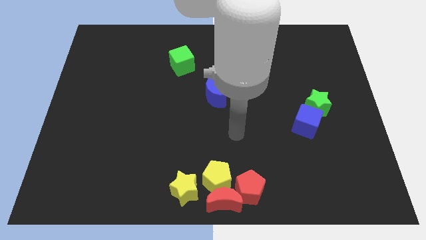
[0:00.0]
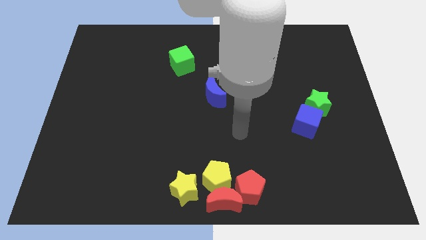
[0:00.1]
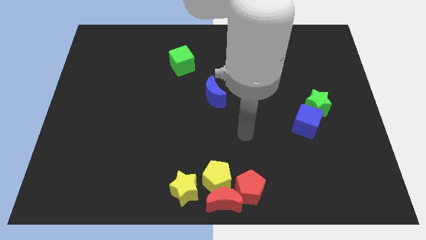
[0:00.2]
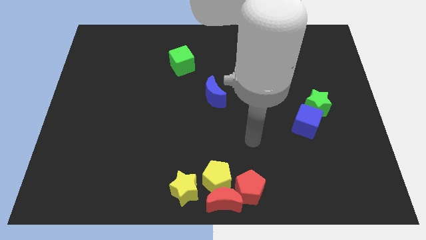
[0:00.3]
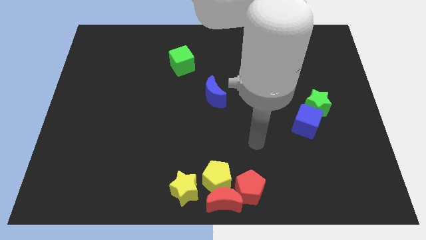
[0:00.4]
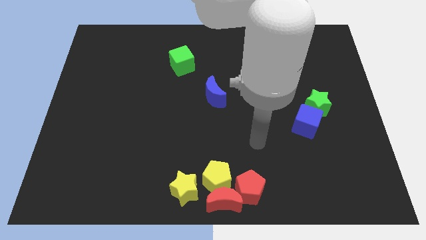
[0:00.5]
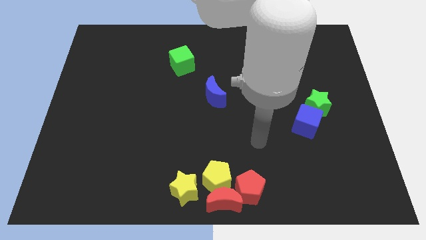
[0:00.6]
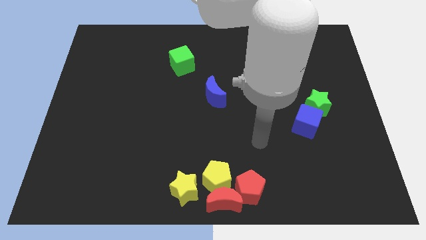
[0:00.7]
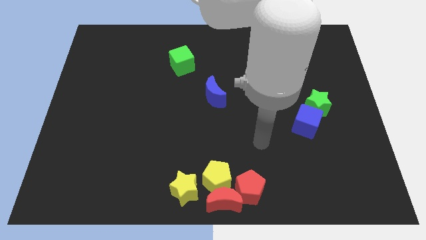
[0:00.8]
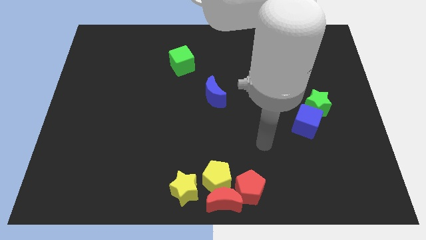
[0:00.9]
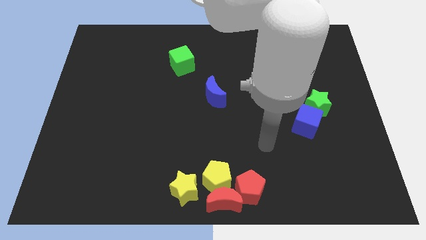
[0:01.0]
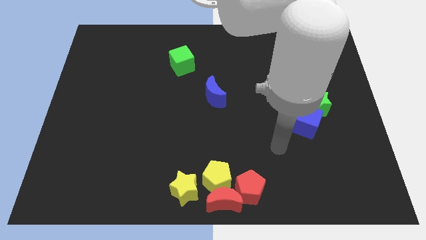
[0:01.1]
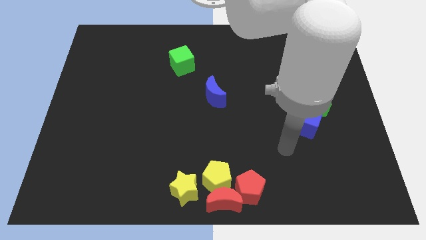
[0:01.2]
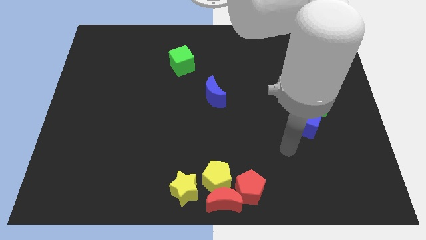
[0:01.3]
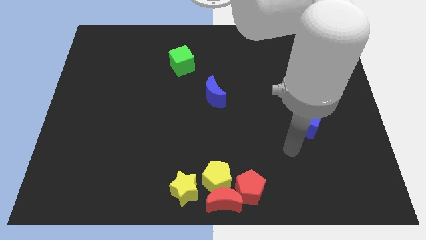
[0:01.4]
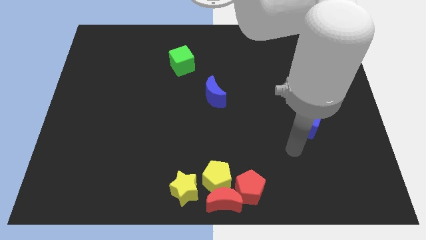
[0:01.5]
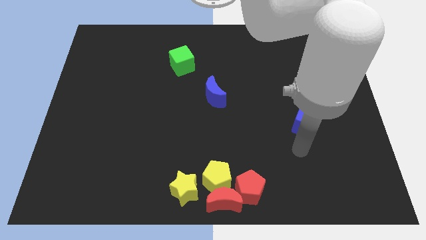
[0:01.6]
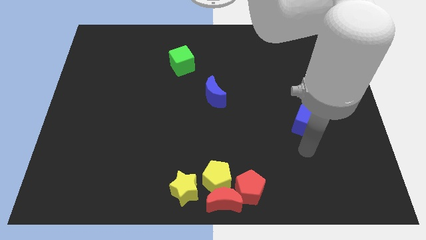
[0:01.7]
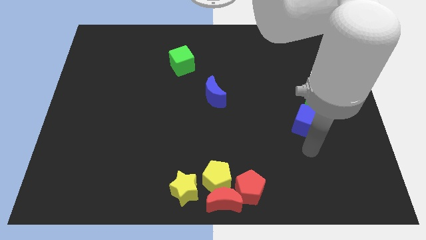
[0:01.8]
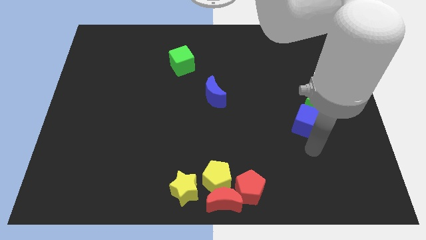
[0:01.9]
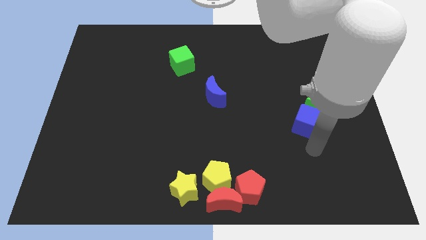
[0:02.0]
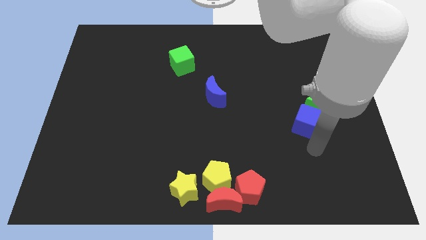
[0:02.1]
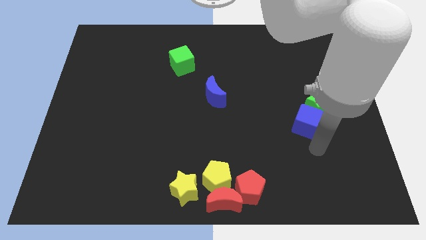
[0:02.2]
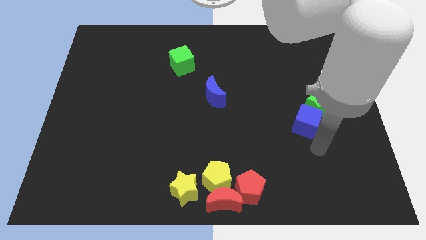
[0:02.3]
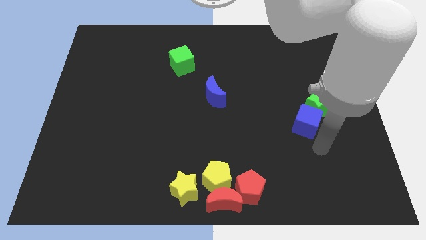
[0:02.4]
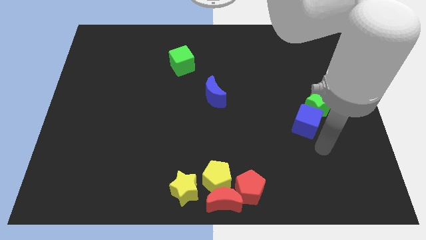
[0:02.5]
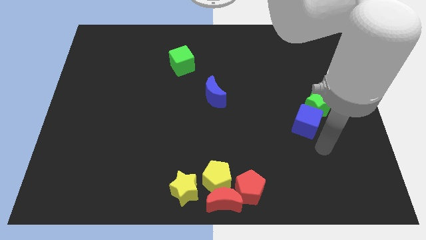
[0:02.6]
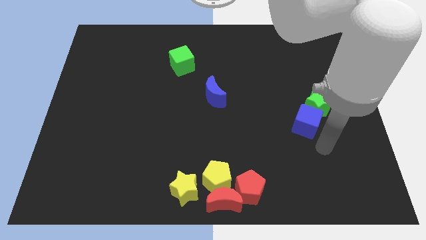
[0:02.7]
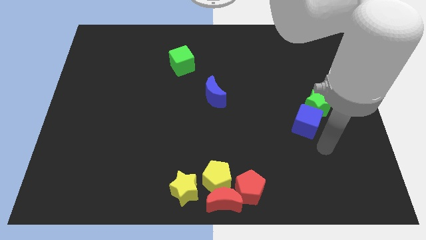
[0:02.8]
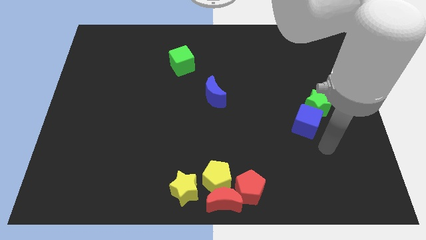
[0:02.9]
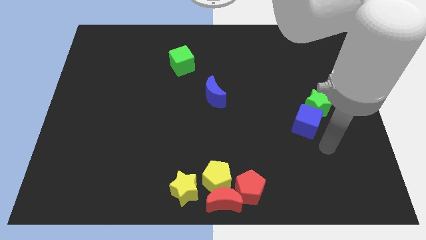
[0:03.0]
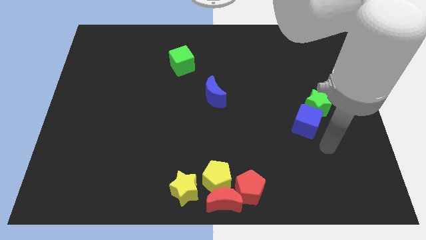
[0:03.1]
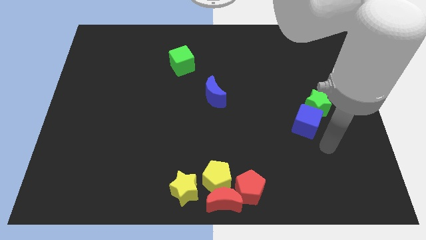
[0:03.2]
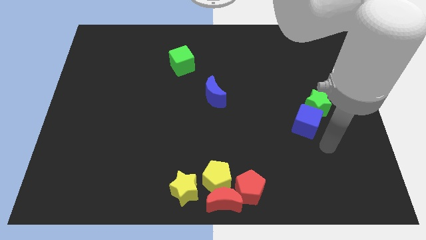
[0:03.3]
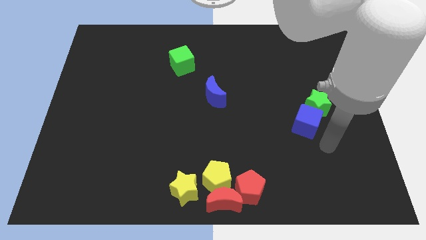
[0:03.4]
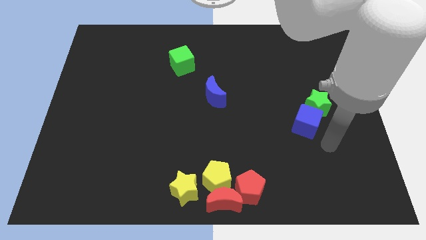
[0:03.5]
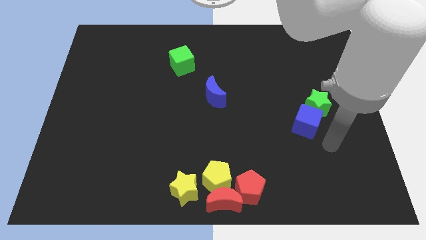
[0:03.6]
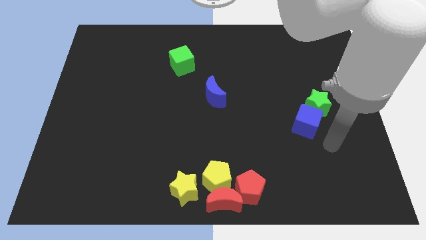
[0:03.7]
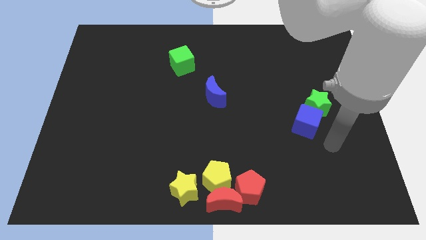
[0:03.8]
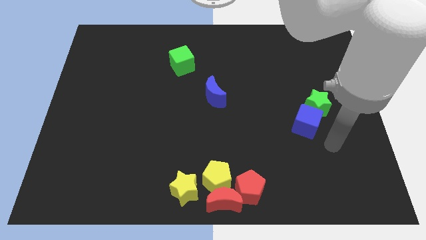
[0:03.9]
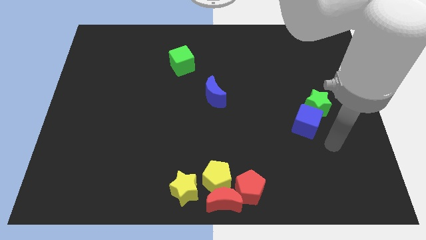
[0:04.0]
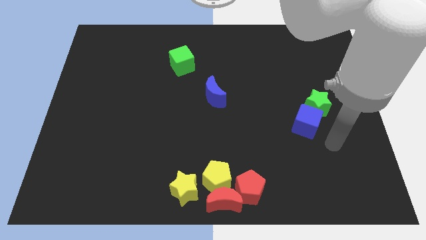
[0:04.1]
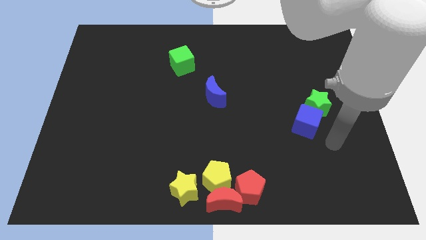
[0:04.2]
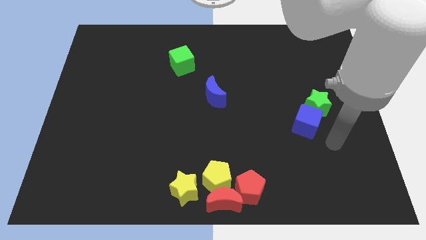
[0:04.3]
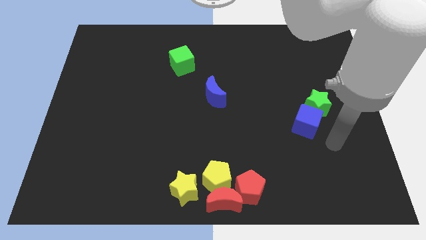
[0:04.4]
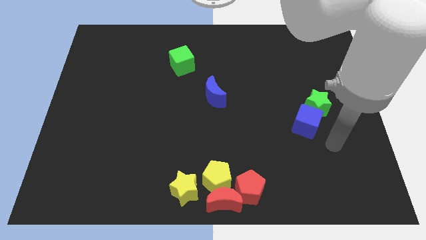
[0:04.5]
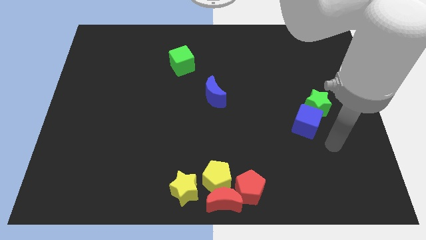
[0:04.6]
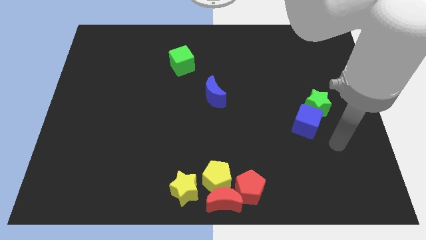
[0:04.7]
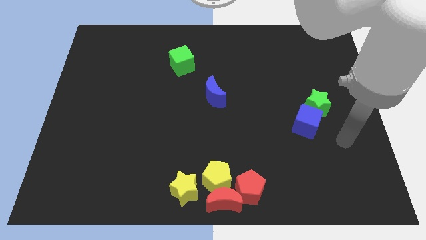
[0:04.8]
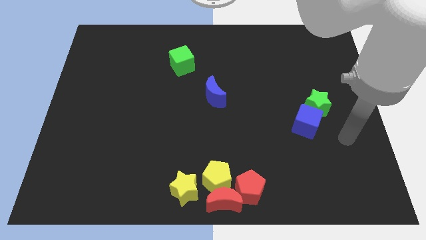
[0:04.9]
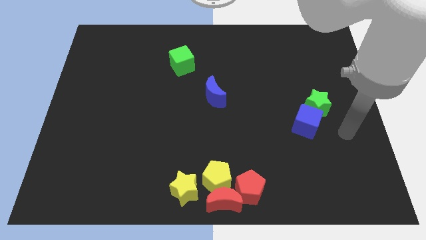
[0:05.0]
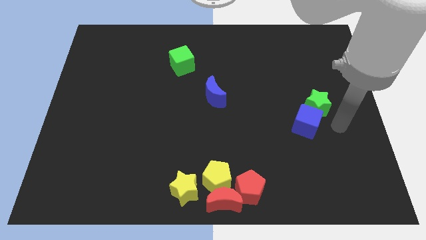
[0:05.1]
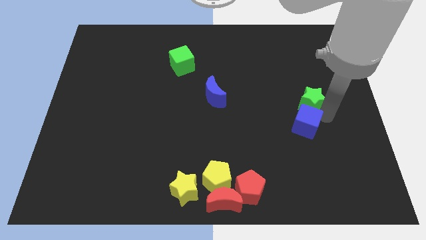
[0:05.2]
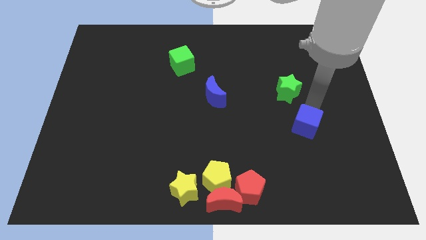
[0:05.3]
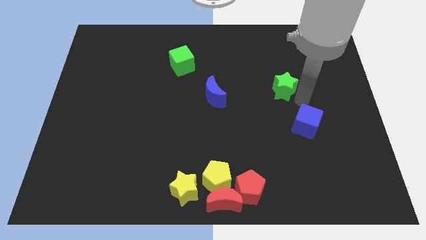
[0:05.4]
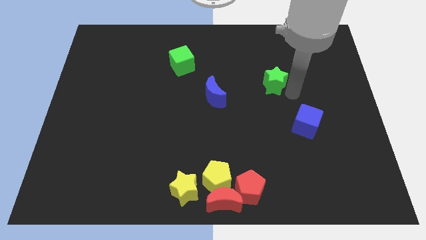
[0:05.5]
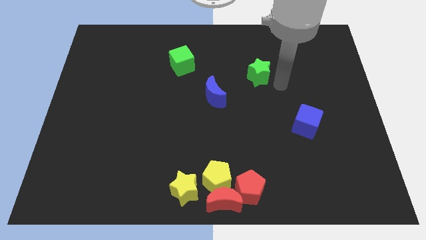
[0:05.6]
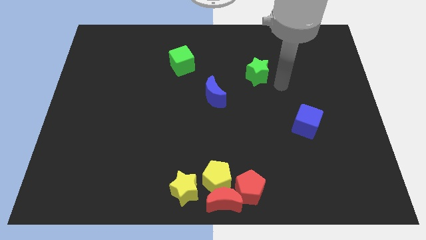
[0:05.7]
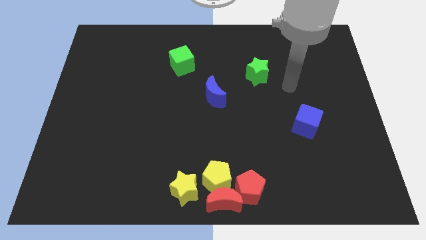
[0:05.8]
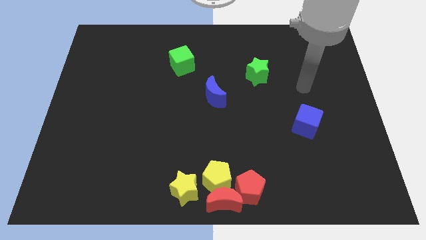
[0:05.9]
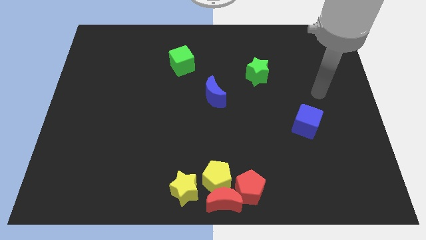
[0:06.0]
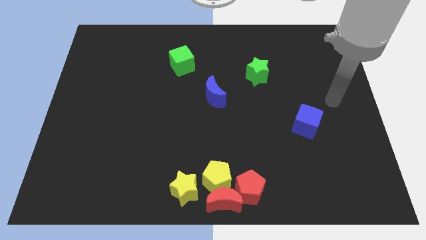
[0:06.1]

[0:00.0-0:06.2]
move your arm towards the green star on the right center of the board

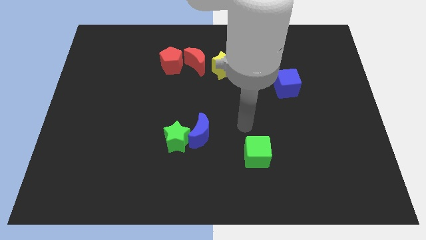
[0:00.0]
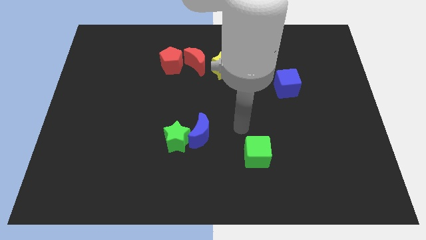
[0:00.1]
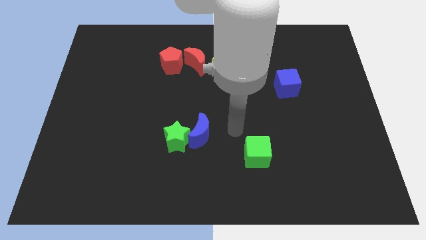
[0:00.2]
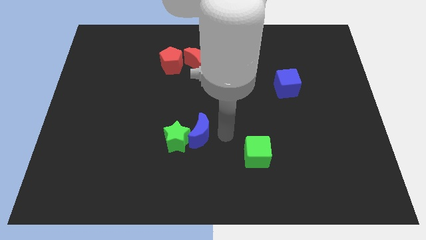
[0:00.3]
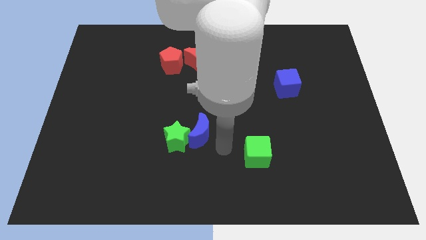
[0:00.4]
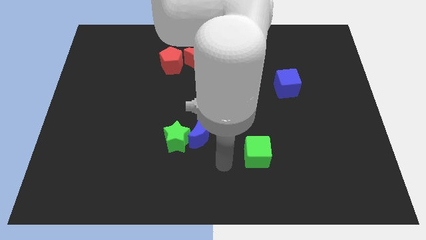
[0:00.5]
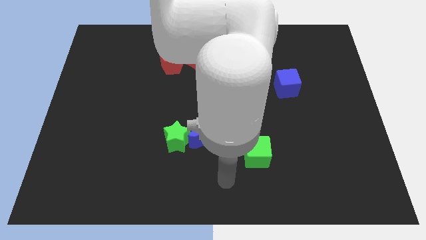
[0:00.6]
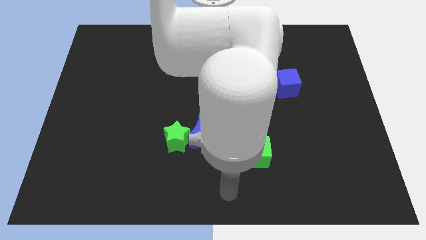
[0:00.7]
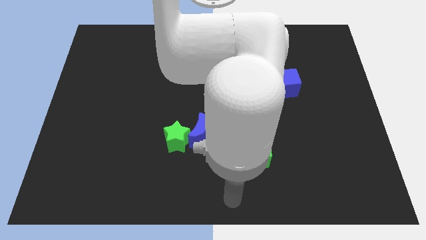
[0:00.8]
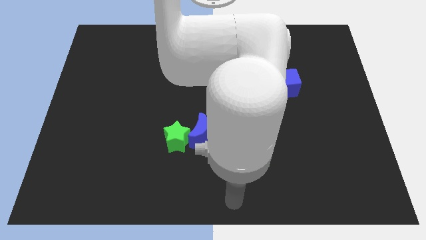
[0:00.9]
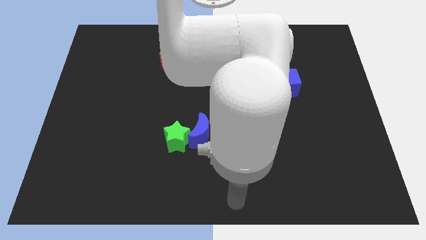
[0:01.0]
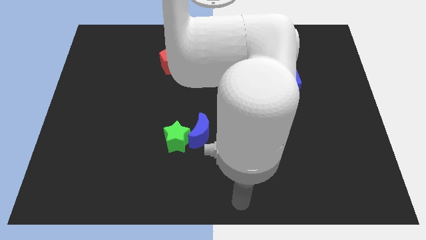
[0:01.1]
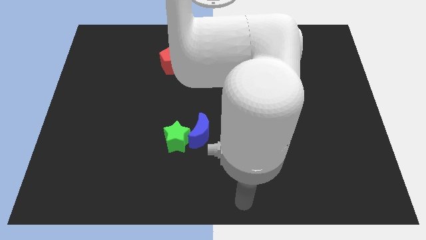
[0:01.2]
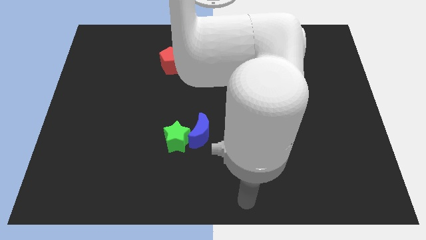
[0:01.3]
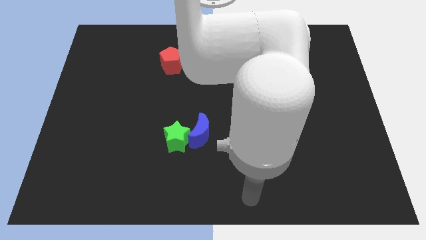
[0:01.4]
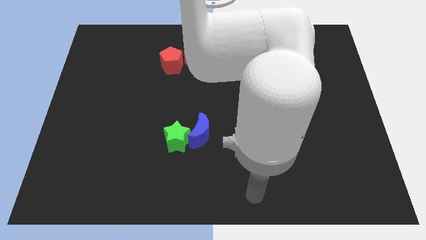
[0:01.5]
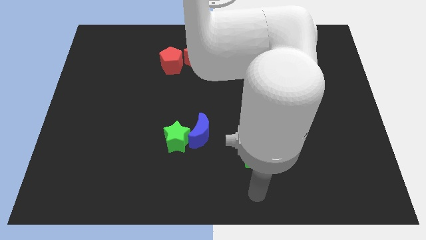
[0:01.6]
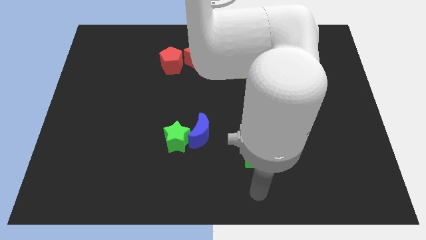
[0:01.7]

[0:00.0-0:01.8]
move the arm towards green cube

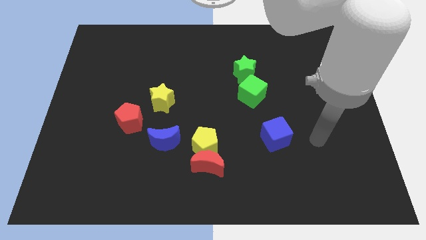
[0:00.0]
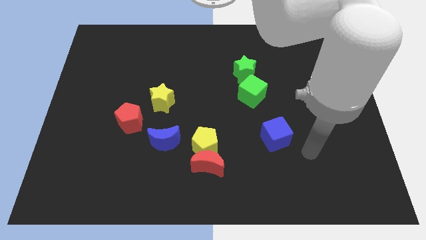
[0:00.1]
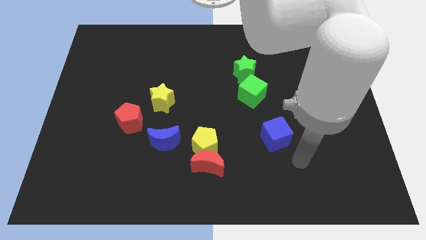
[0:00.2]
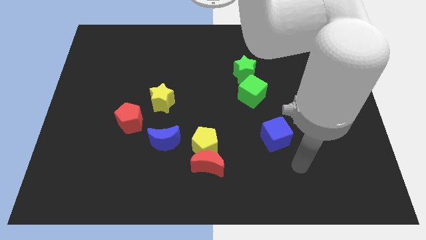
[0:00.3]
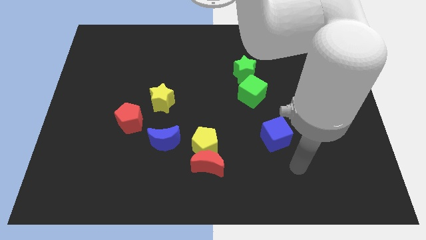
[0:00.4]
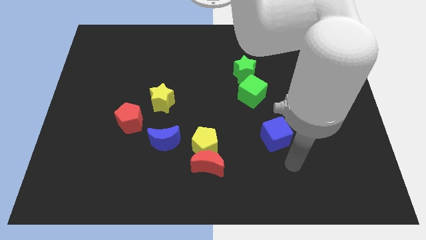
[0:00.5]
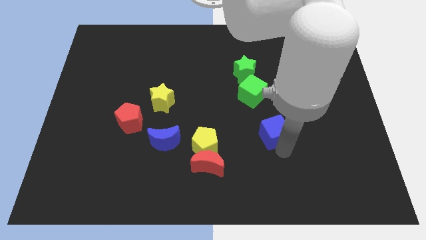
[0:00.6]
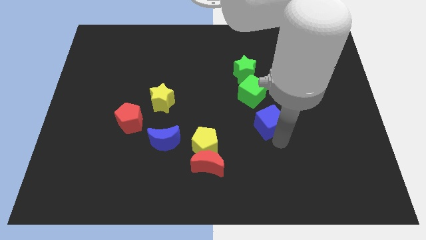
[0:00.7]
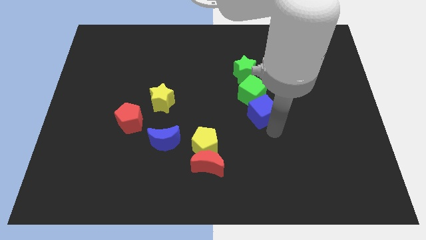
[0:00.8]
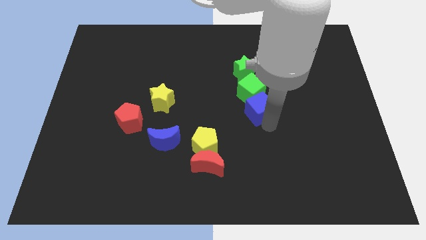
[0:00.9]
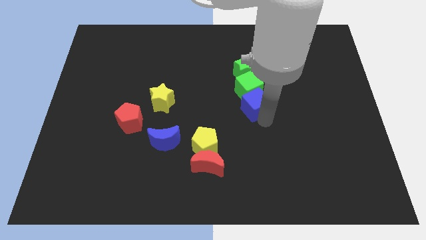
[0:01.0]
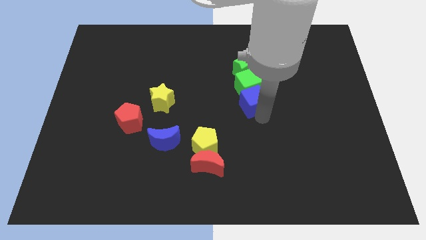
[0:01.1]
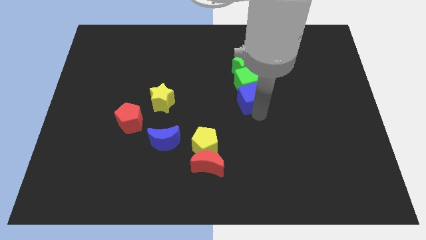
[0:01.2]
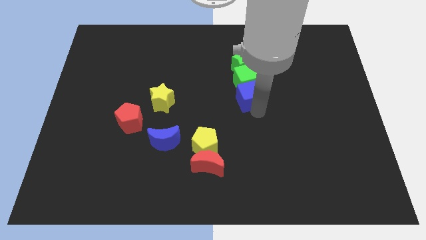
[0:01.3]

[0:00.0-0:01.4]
push the blue cube towards the green cube
